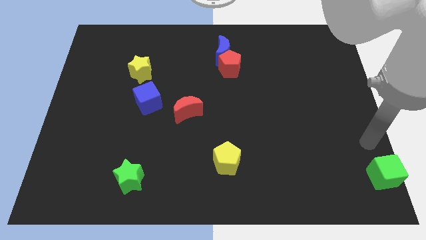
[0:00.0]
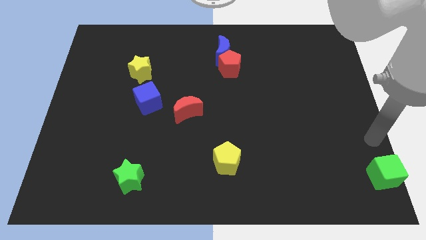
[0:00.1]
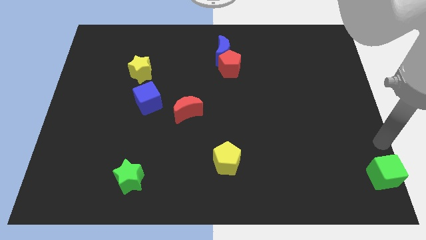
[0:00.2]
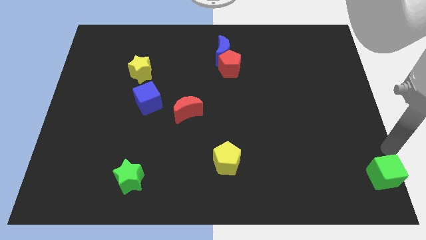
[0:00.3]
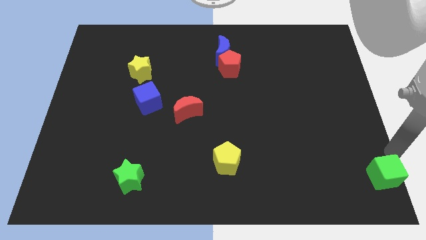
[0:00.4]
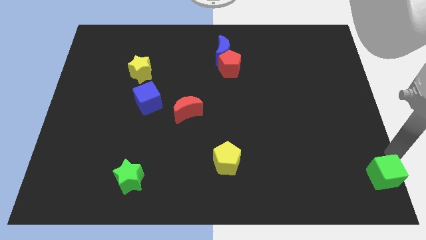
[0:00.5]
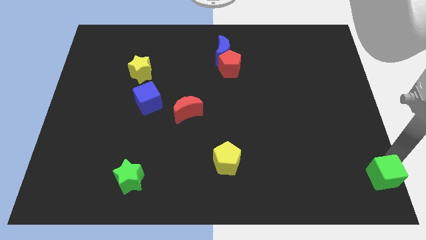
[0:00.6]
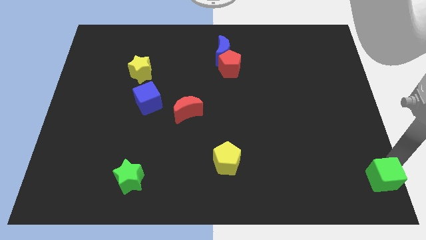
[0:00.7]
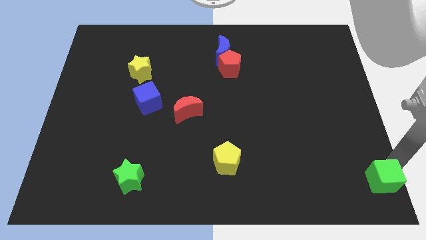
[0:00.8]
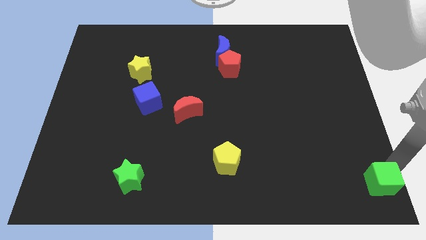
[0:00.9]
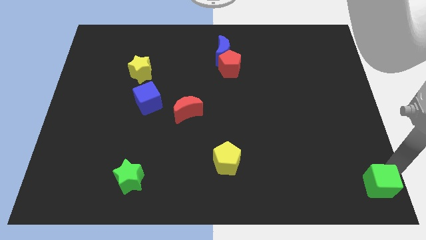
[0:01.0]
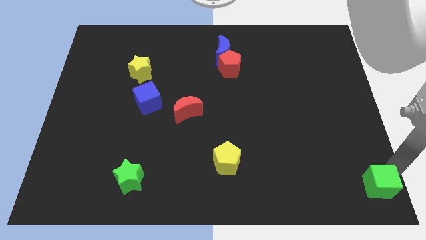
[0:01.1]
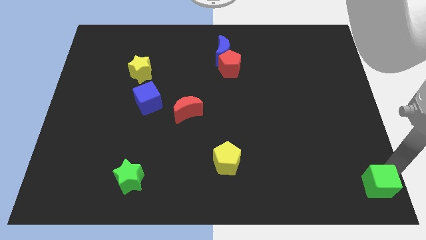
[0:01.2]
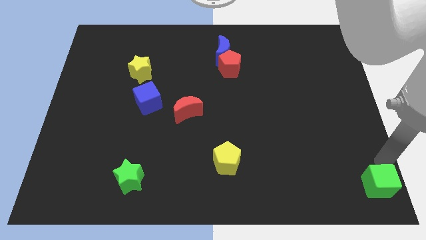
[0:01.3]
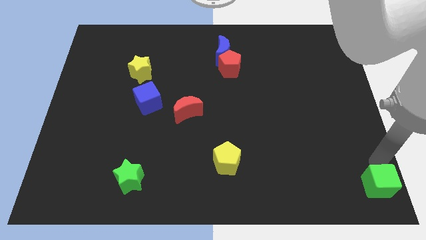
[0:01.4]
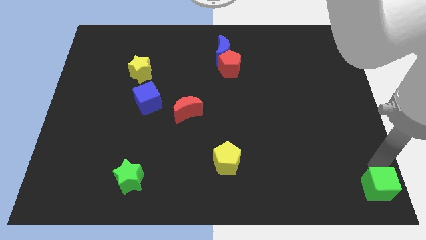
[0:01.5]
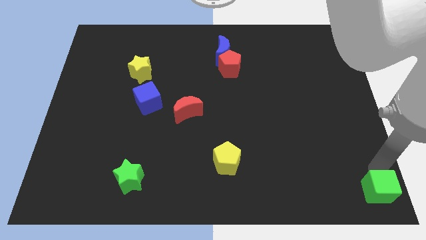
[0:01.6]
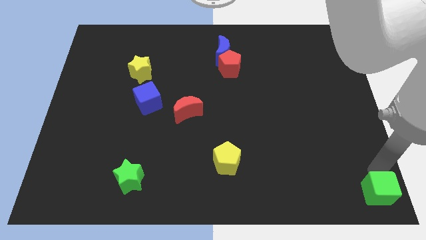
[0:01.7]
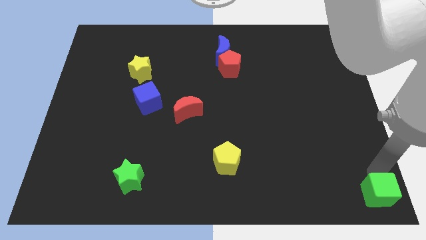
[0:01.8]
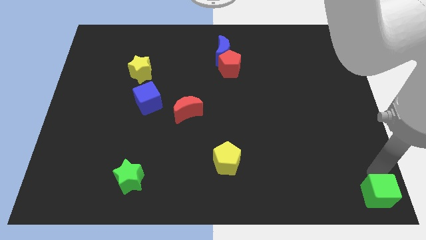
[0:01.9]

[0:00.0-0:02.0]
push the green cube to the bottom right corner of the board

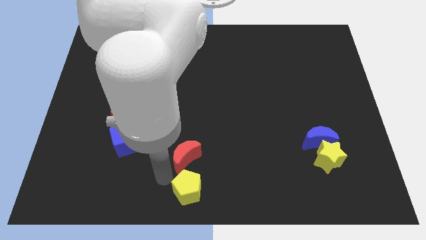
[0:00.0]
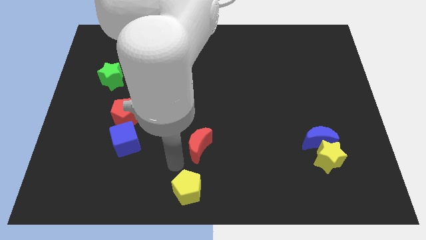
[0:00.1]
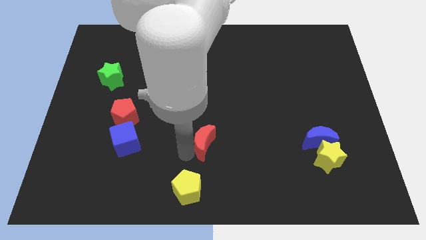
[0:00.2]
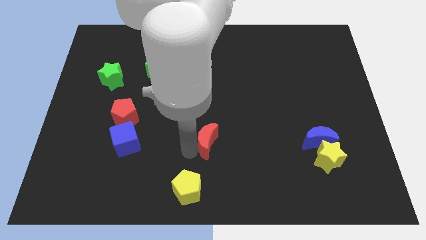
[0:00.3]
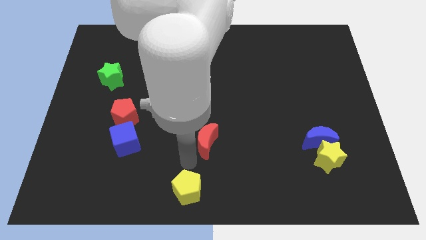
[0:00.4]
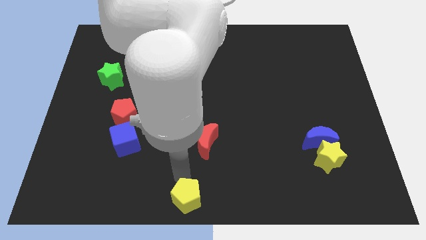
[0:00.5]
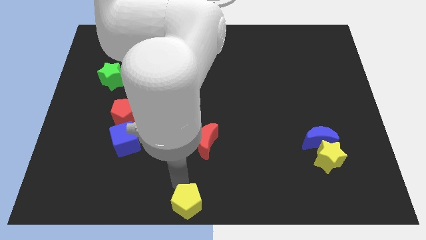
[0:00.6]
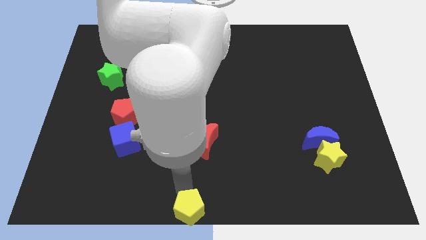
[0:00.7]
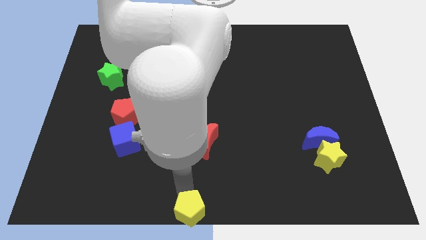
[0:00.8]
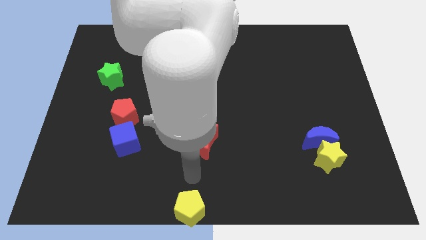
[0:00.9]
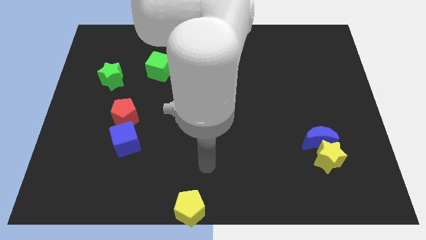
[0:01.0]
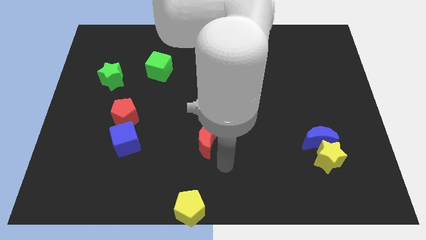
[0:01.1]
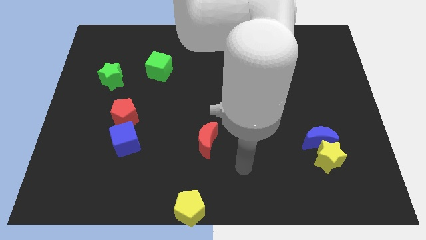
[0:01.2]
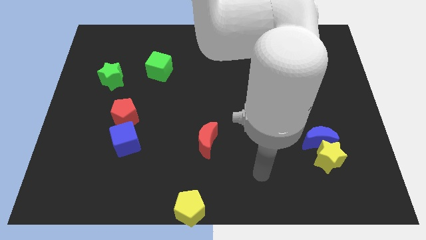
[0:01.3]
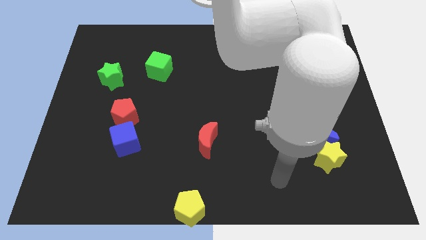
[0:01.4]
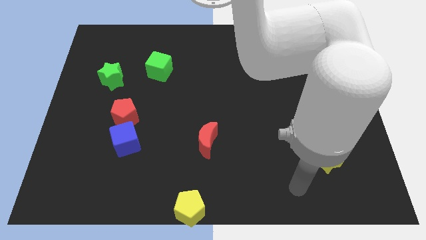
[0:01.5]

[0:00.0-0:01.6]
push red crescent and yellow pentagon apart

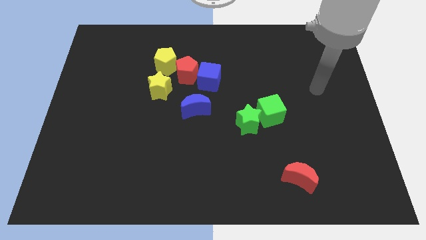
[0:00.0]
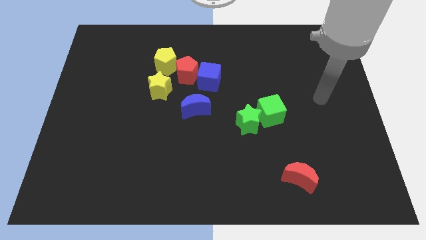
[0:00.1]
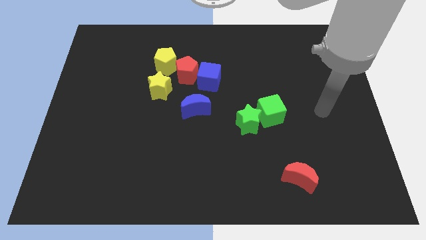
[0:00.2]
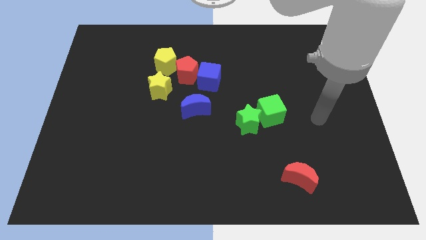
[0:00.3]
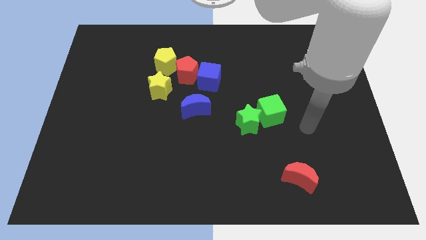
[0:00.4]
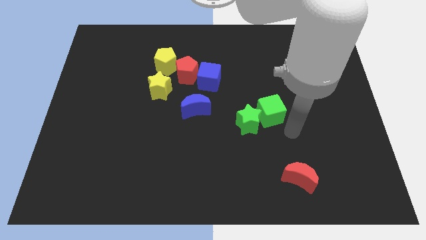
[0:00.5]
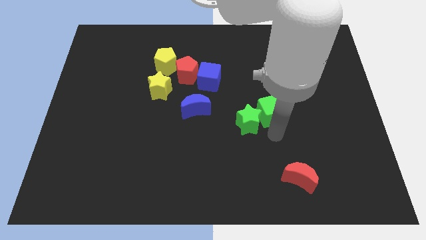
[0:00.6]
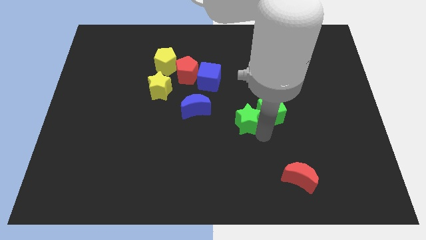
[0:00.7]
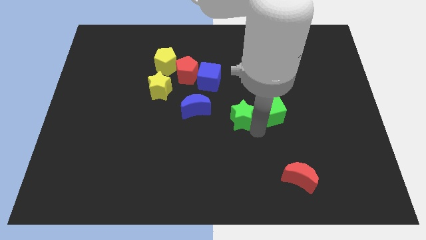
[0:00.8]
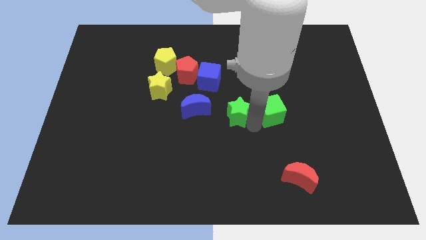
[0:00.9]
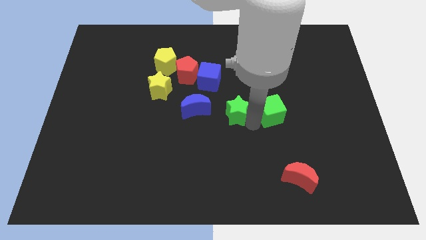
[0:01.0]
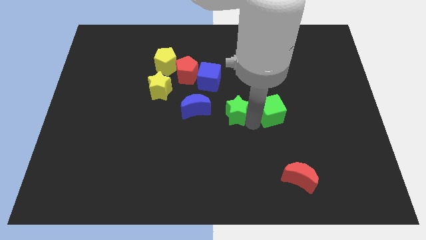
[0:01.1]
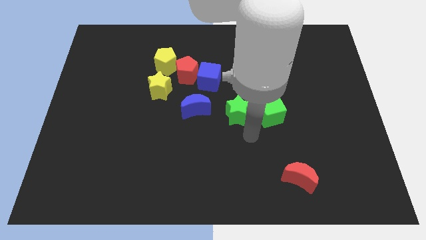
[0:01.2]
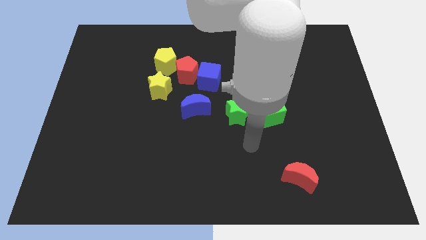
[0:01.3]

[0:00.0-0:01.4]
push the green star towards the top side

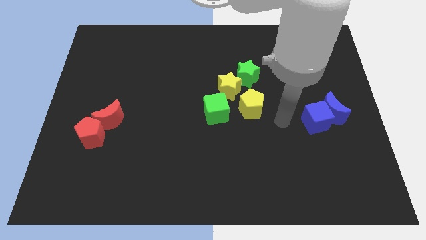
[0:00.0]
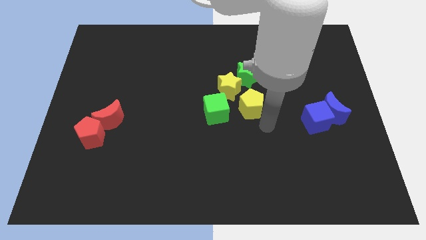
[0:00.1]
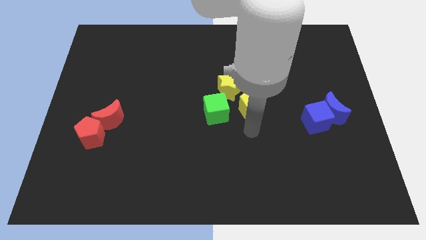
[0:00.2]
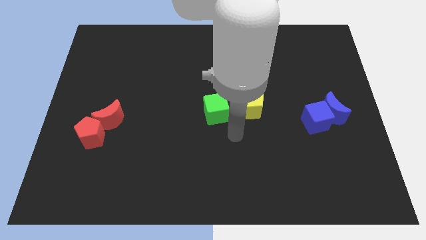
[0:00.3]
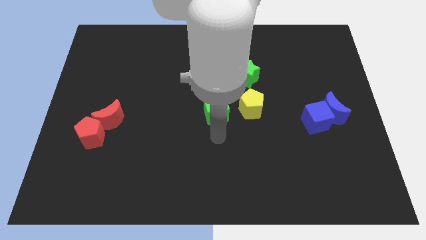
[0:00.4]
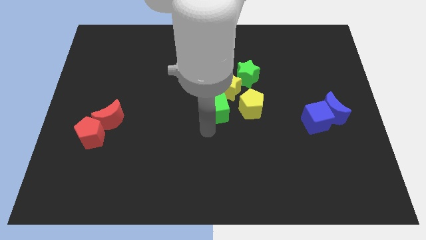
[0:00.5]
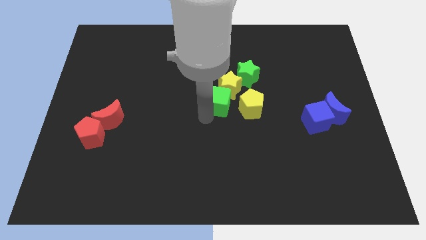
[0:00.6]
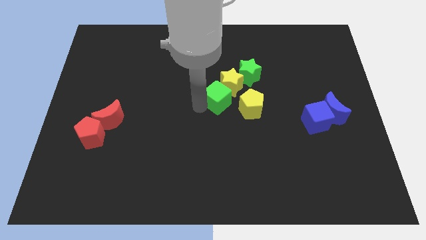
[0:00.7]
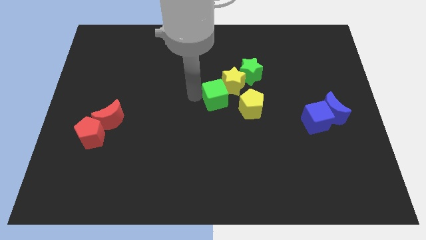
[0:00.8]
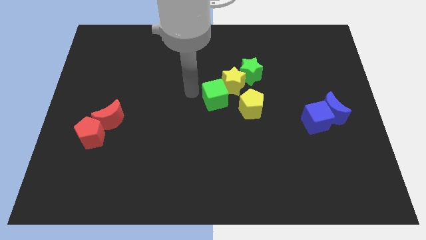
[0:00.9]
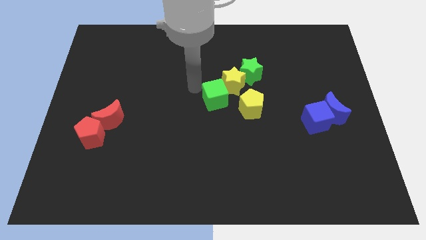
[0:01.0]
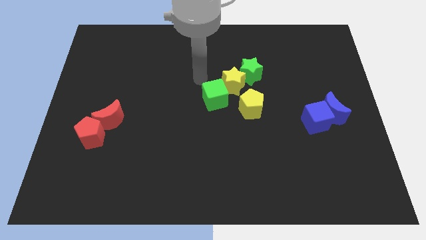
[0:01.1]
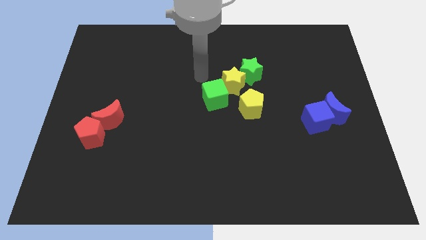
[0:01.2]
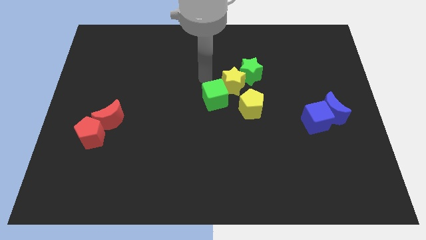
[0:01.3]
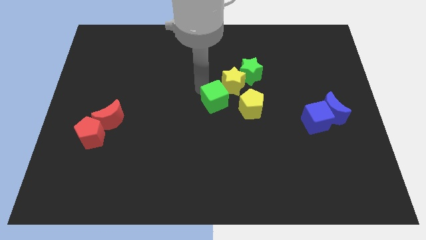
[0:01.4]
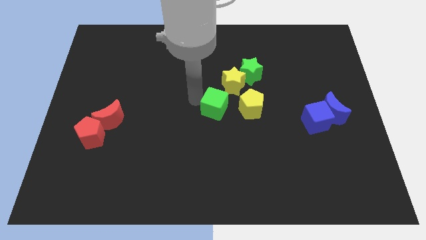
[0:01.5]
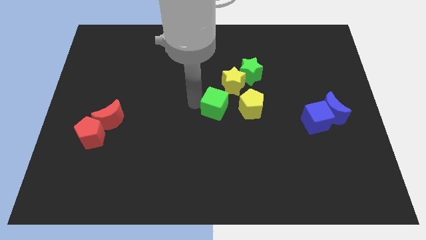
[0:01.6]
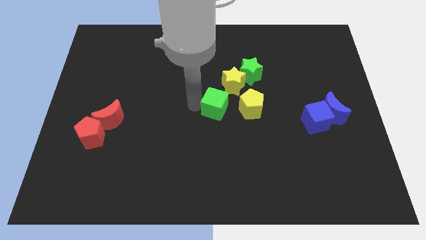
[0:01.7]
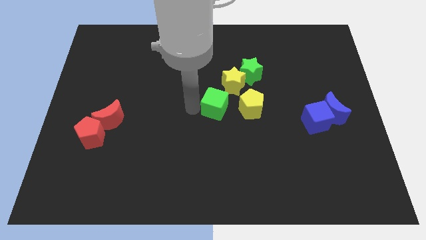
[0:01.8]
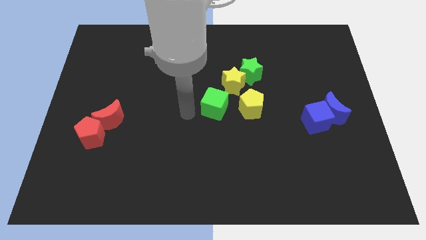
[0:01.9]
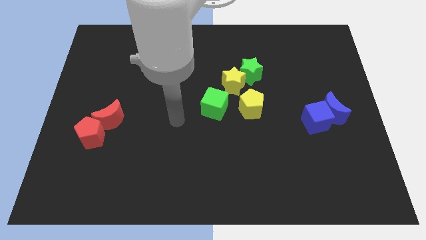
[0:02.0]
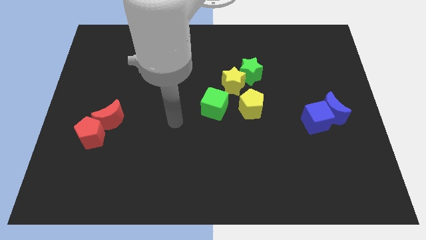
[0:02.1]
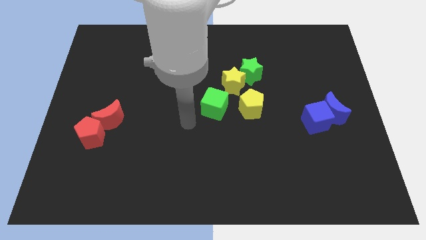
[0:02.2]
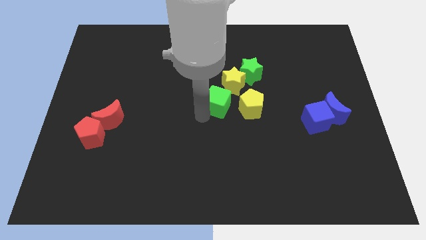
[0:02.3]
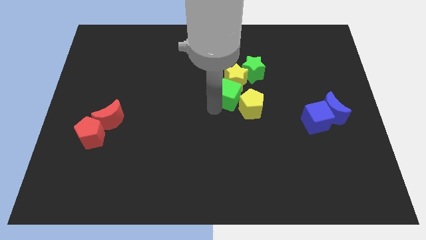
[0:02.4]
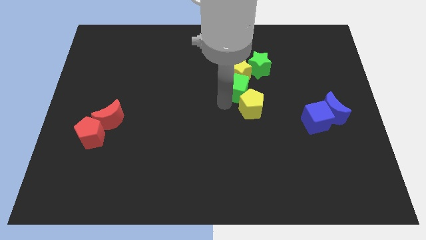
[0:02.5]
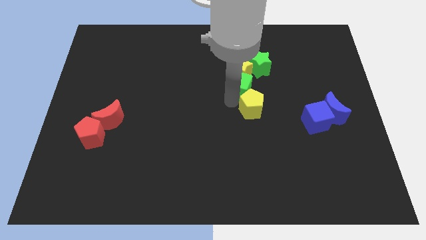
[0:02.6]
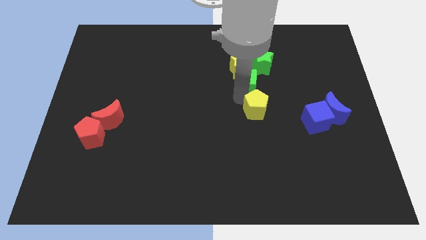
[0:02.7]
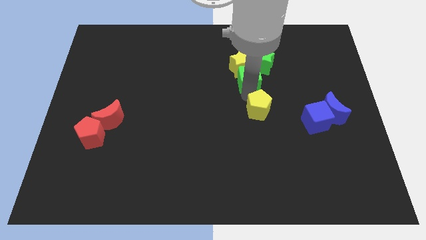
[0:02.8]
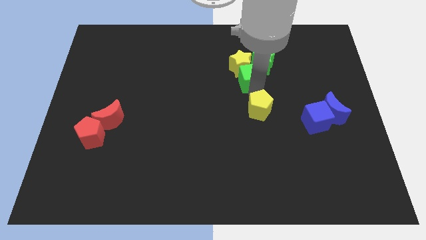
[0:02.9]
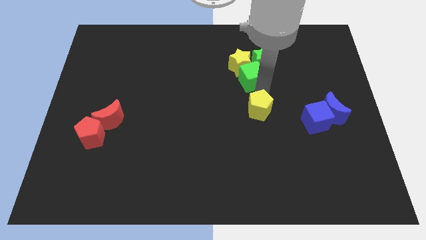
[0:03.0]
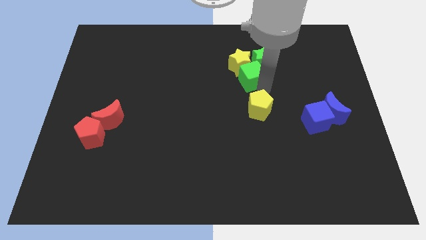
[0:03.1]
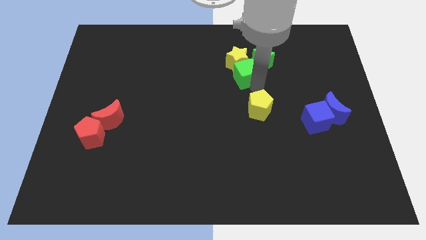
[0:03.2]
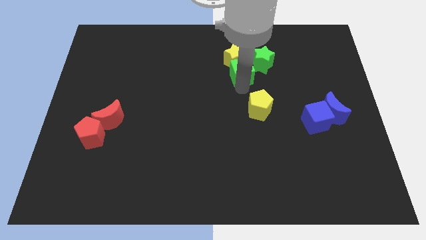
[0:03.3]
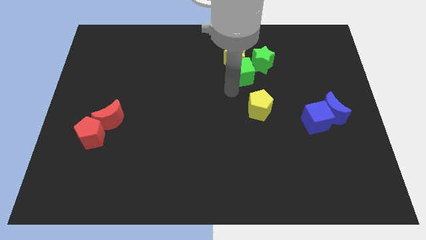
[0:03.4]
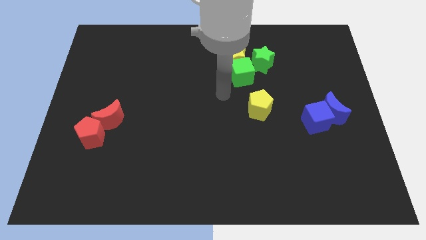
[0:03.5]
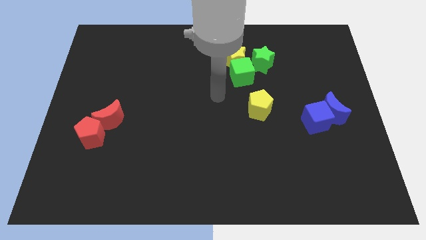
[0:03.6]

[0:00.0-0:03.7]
move the green cube into yellow star

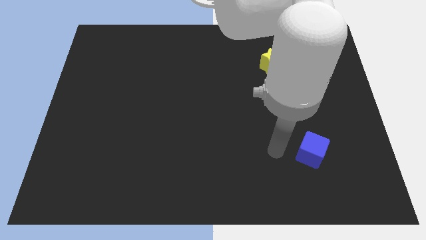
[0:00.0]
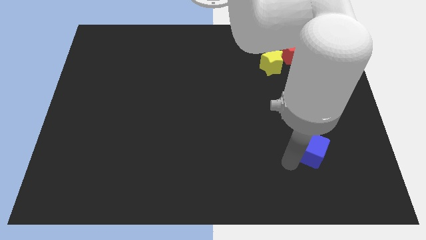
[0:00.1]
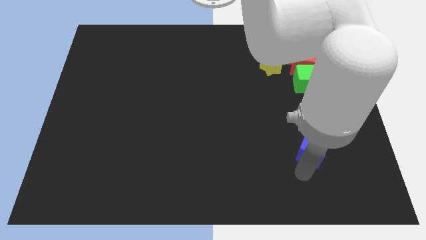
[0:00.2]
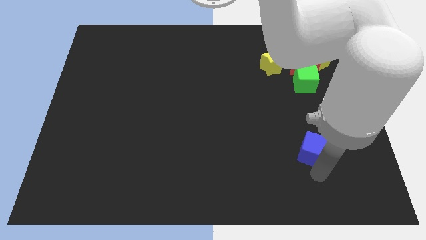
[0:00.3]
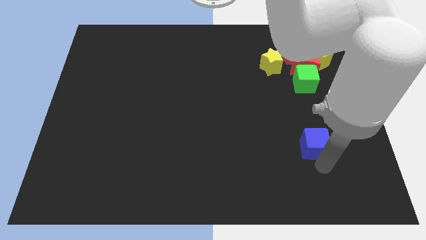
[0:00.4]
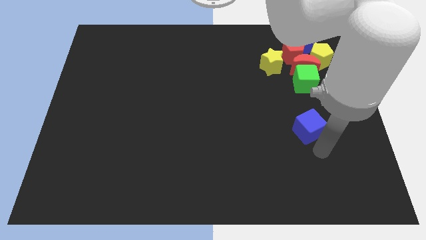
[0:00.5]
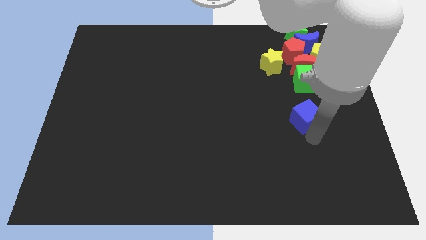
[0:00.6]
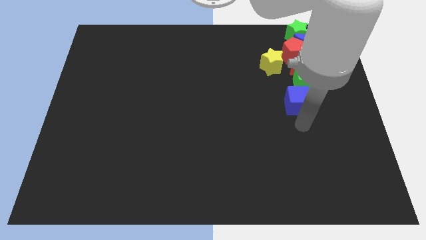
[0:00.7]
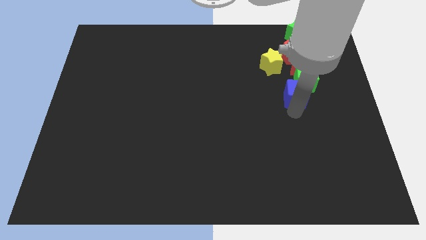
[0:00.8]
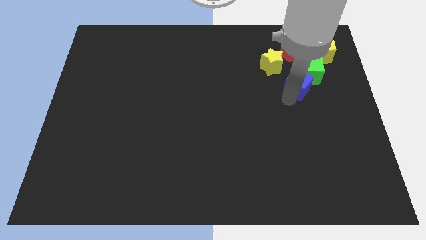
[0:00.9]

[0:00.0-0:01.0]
push the blue cube bottom left to the green cube
